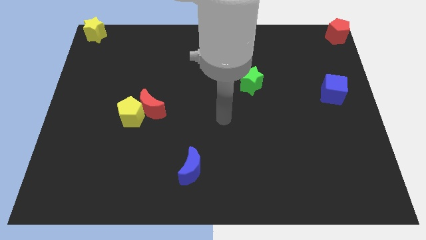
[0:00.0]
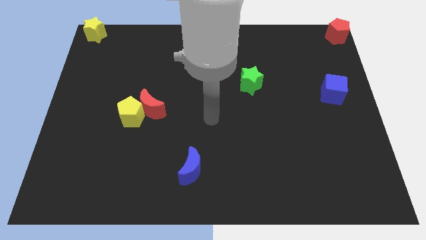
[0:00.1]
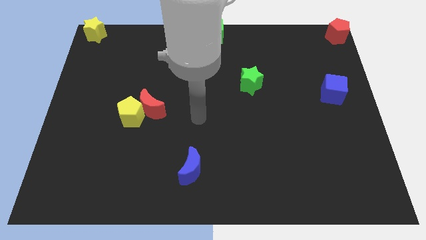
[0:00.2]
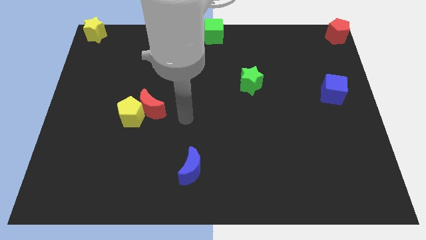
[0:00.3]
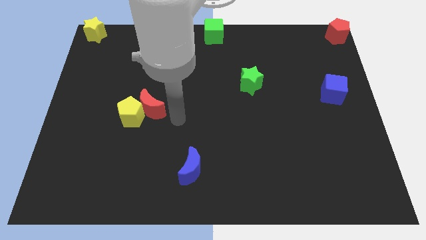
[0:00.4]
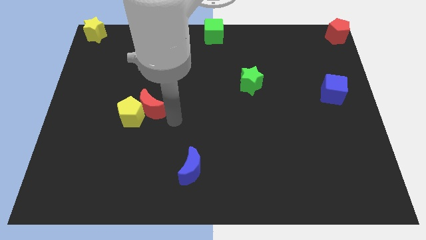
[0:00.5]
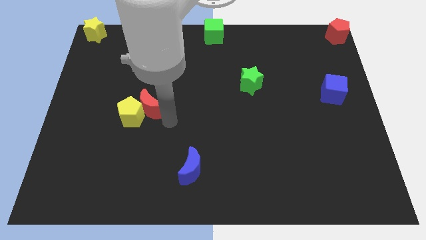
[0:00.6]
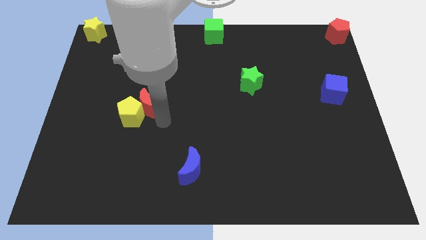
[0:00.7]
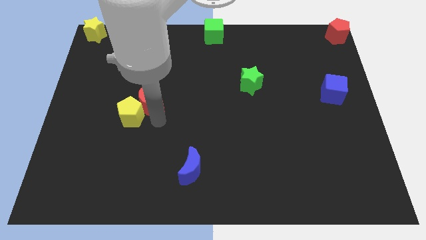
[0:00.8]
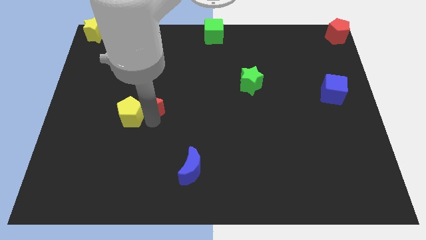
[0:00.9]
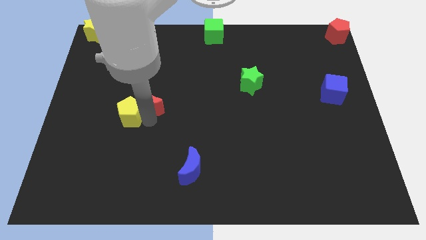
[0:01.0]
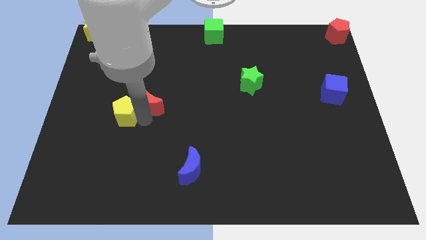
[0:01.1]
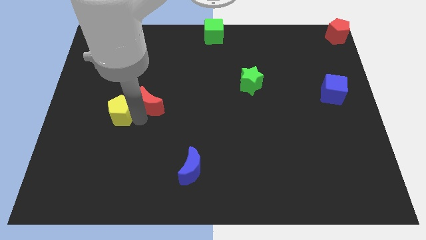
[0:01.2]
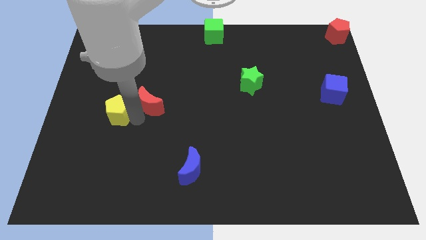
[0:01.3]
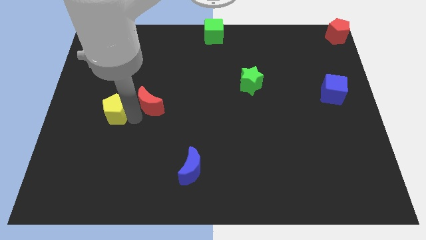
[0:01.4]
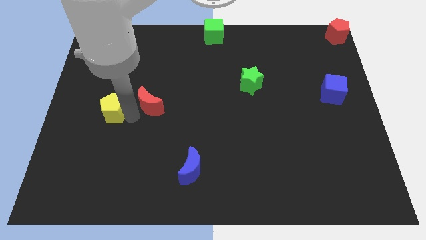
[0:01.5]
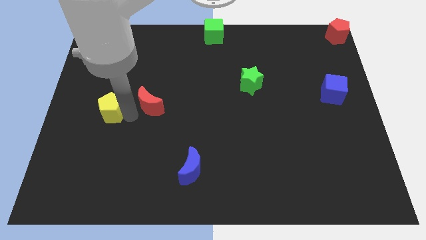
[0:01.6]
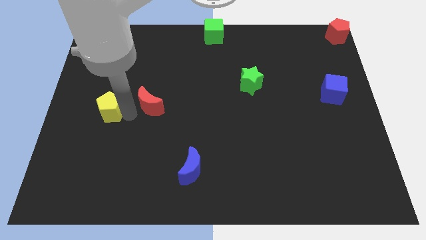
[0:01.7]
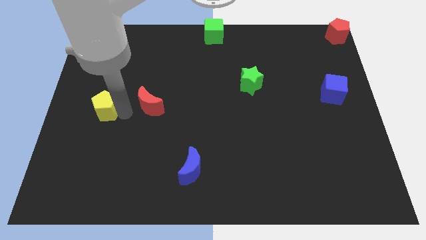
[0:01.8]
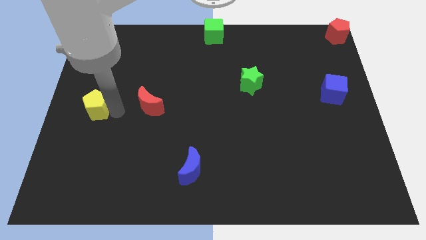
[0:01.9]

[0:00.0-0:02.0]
separate the yellow pentagon from the red moon

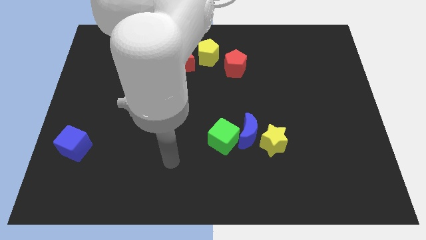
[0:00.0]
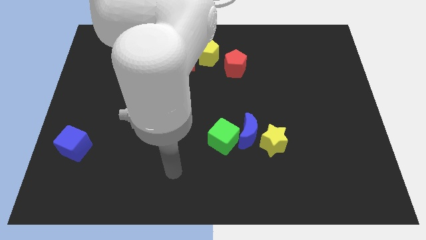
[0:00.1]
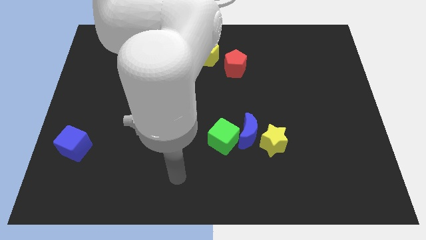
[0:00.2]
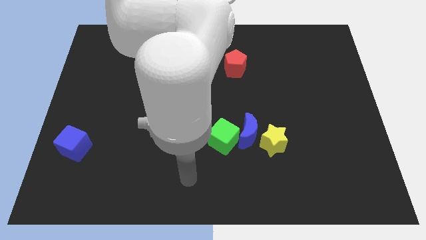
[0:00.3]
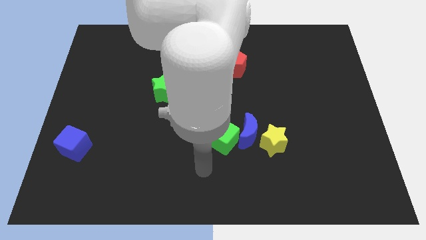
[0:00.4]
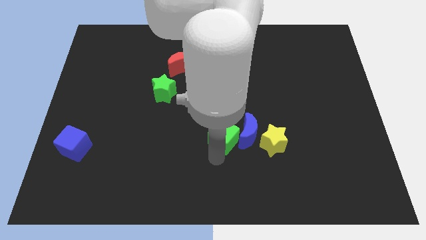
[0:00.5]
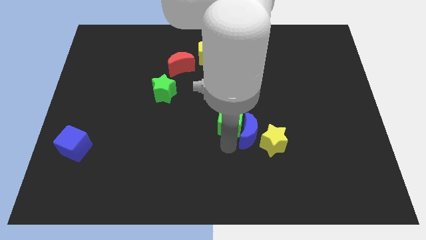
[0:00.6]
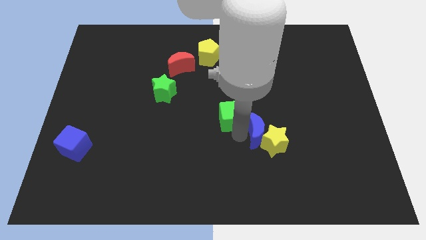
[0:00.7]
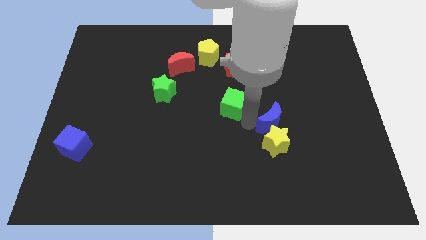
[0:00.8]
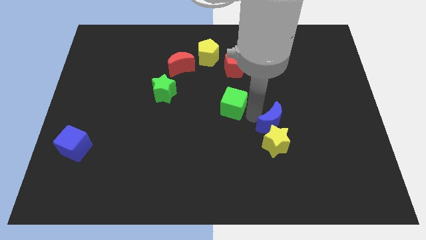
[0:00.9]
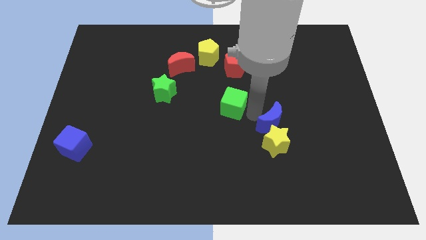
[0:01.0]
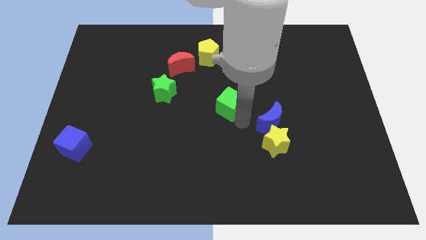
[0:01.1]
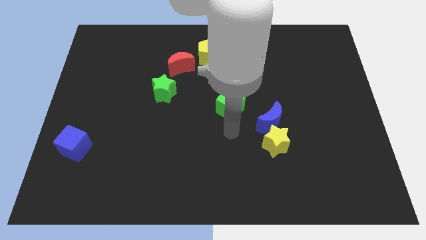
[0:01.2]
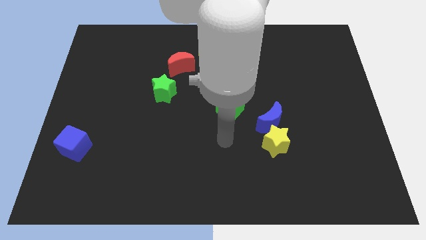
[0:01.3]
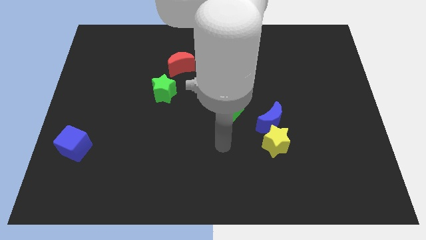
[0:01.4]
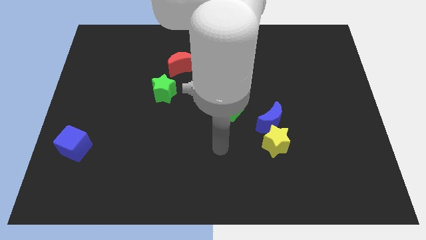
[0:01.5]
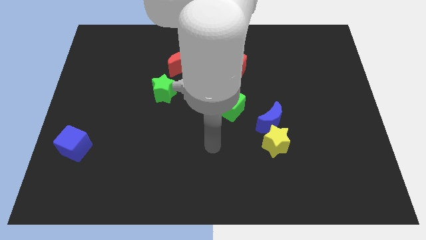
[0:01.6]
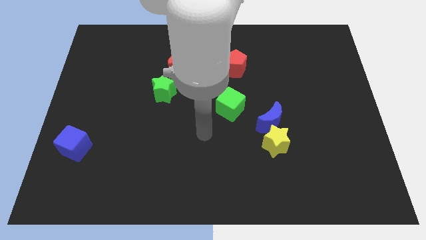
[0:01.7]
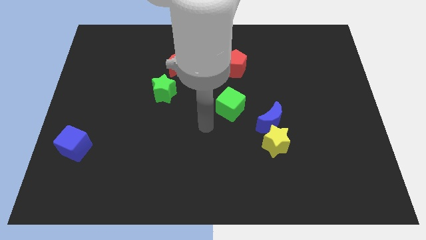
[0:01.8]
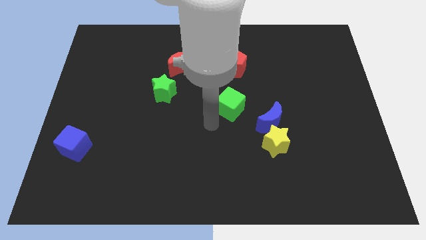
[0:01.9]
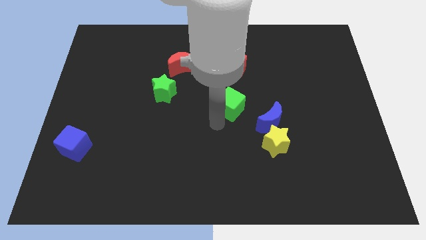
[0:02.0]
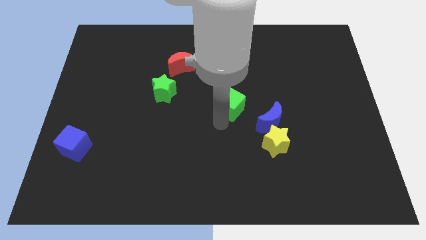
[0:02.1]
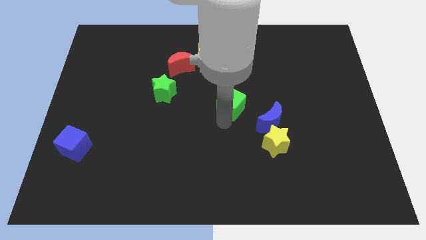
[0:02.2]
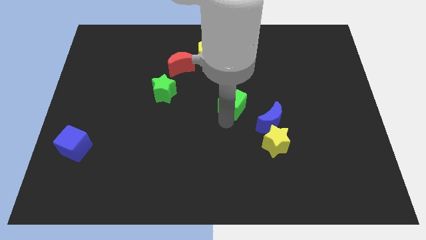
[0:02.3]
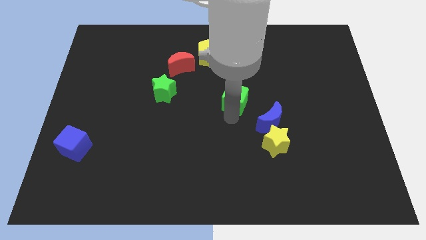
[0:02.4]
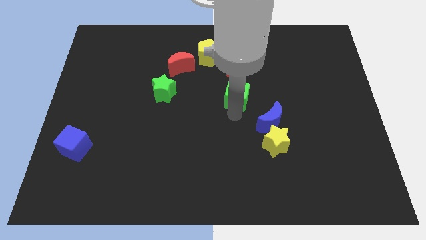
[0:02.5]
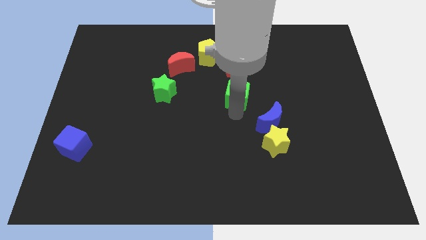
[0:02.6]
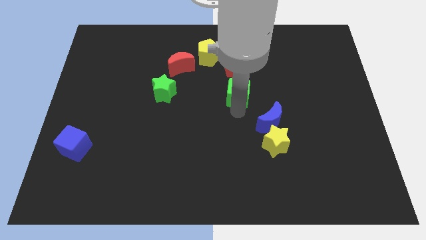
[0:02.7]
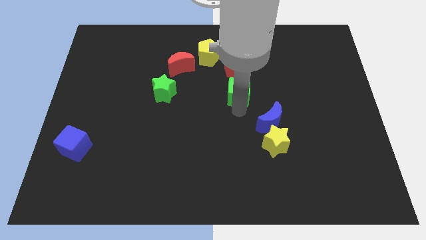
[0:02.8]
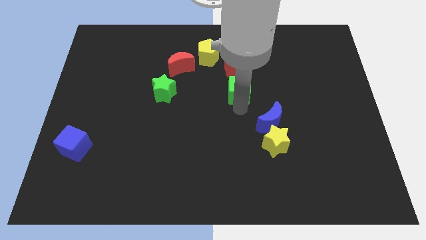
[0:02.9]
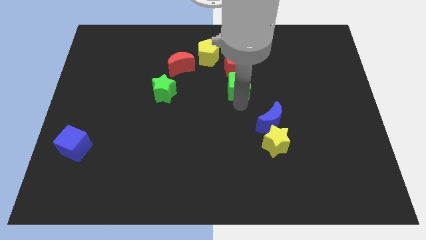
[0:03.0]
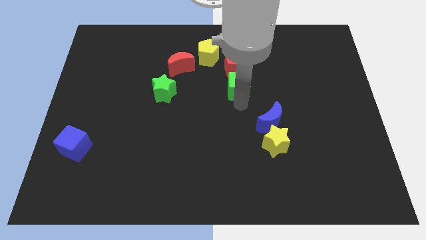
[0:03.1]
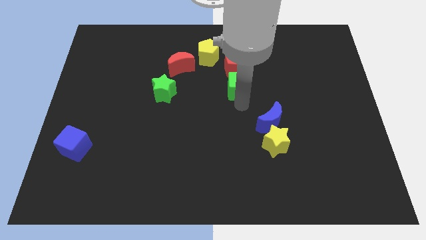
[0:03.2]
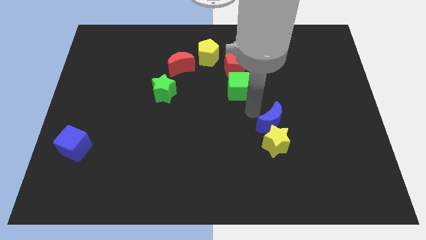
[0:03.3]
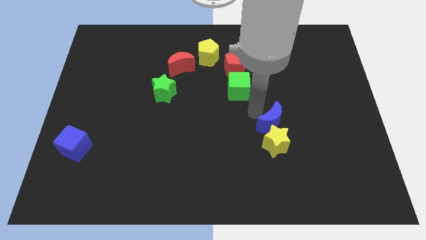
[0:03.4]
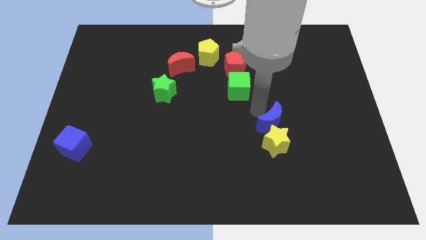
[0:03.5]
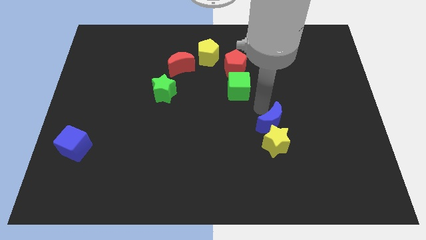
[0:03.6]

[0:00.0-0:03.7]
slide the green cube to the bottom side of the red pentagon

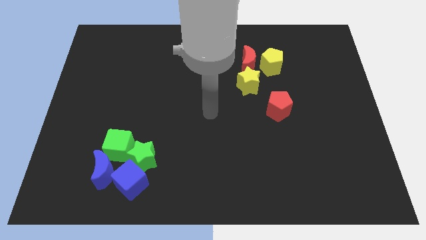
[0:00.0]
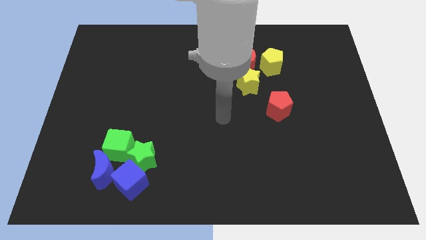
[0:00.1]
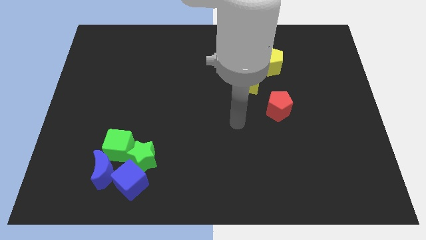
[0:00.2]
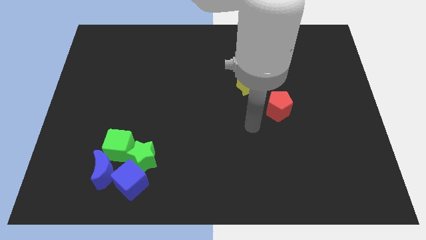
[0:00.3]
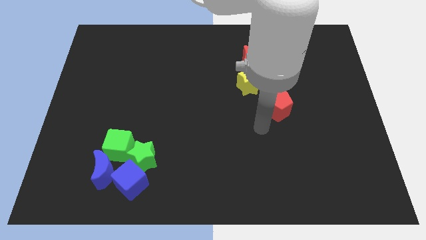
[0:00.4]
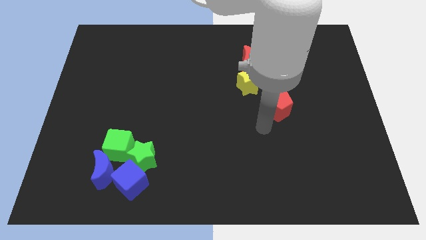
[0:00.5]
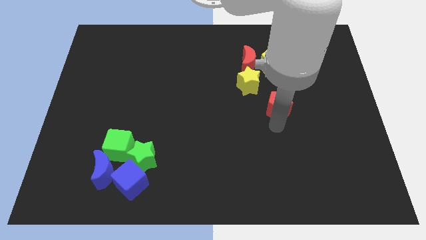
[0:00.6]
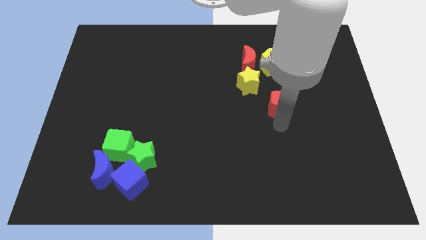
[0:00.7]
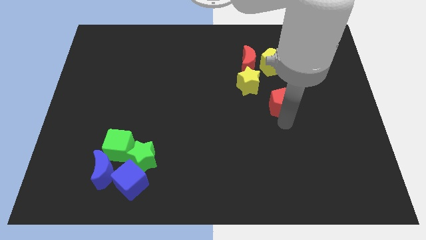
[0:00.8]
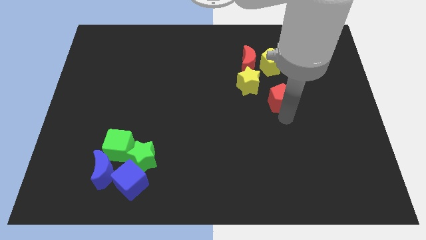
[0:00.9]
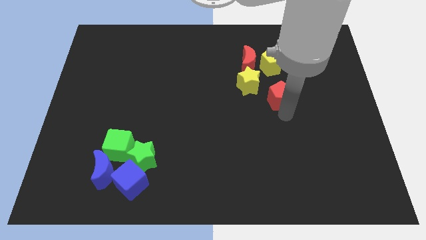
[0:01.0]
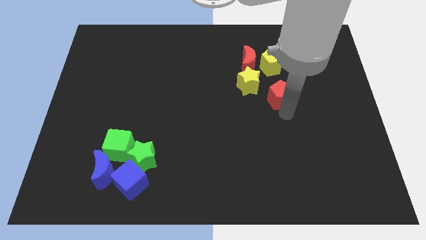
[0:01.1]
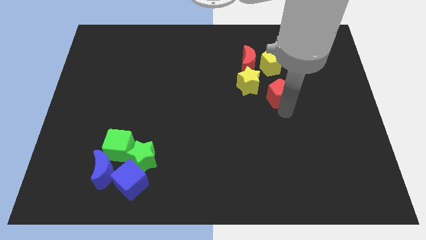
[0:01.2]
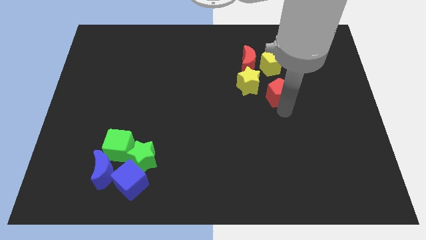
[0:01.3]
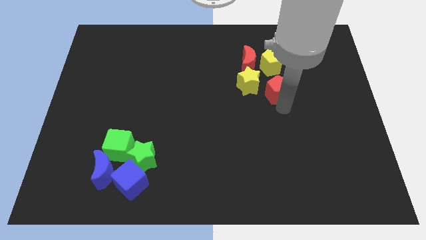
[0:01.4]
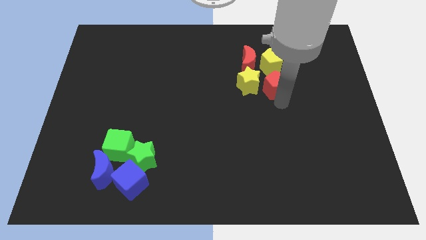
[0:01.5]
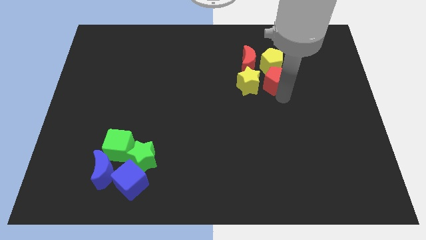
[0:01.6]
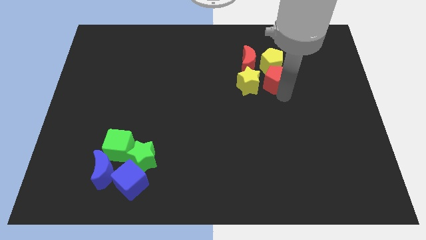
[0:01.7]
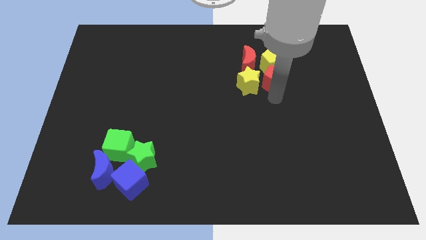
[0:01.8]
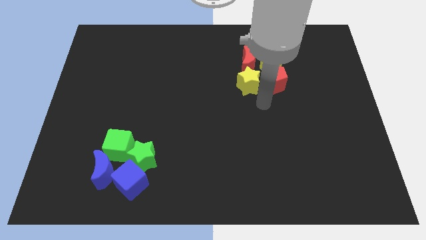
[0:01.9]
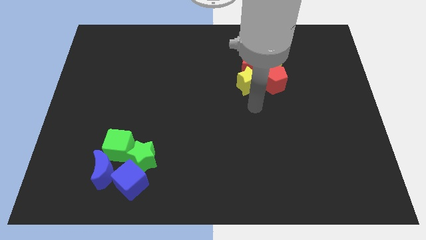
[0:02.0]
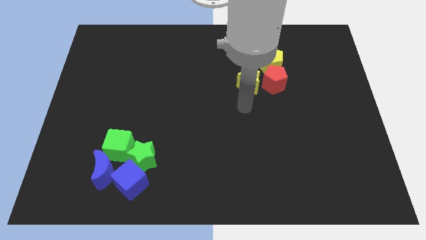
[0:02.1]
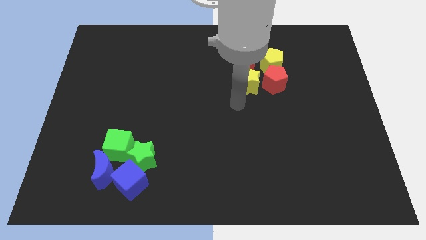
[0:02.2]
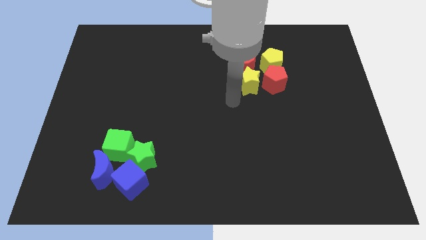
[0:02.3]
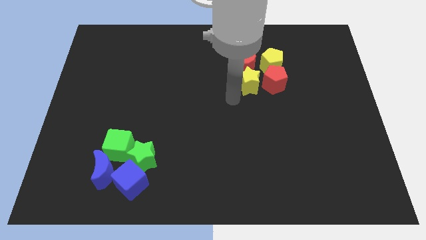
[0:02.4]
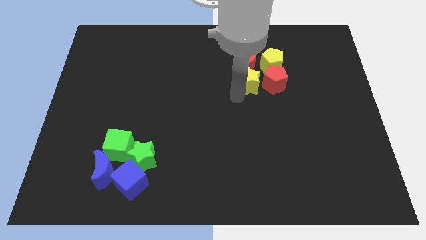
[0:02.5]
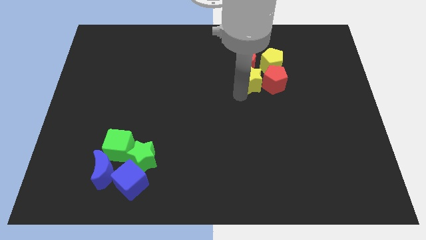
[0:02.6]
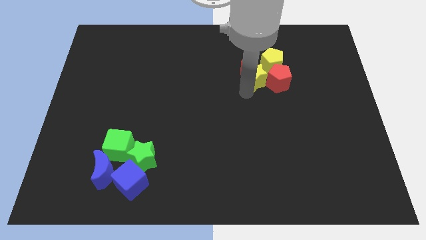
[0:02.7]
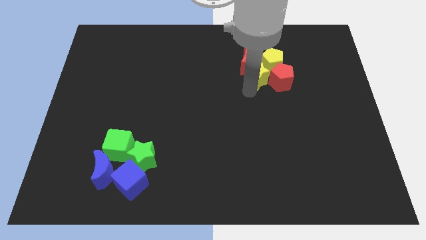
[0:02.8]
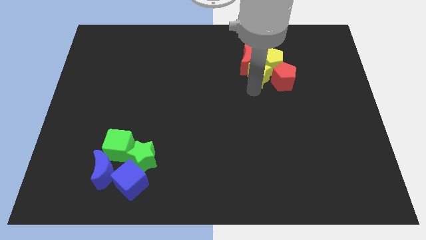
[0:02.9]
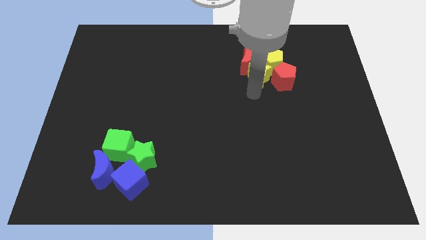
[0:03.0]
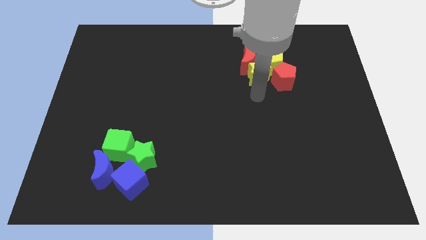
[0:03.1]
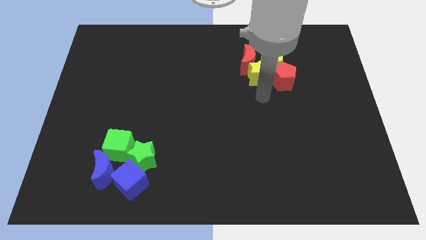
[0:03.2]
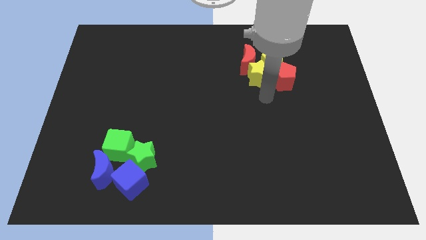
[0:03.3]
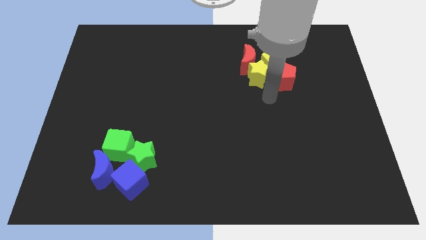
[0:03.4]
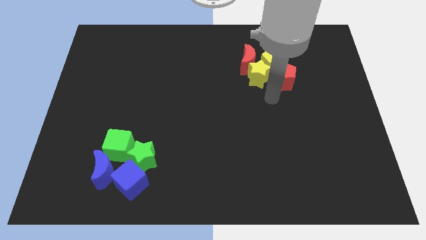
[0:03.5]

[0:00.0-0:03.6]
push the red pentagon into the 3 blocks so as to make 4
